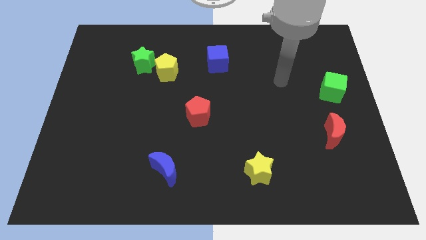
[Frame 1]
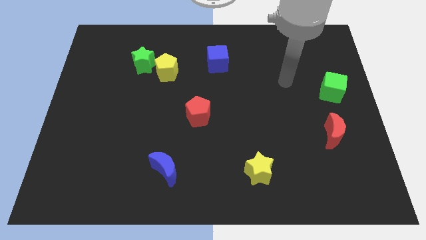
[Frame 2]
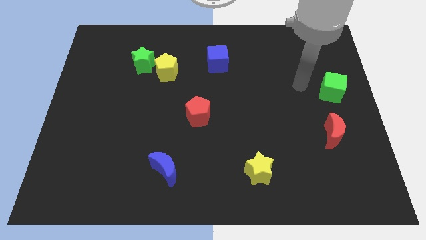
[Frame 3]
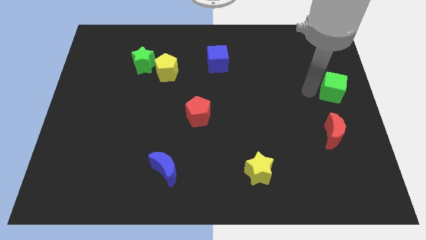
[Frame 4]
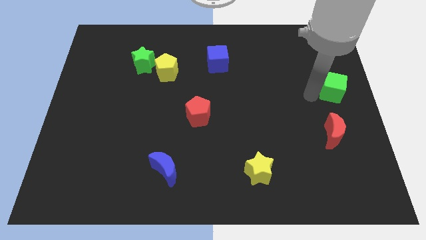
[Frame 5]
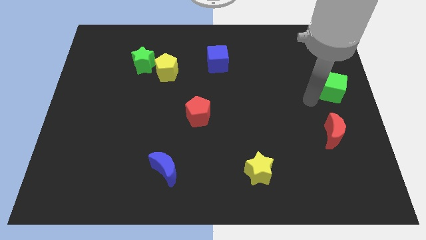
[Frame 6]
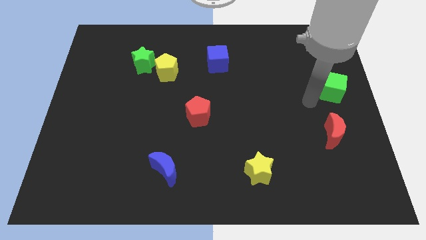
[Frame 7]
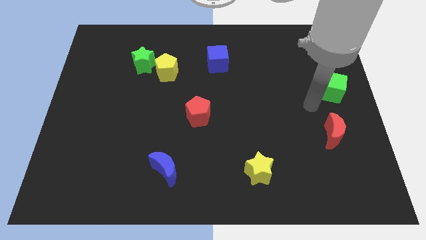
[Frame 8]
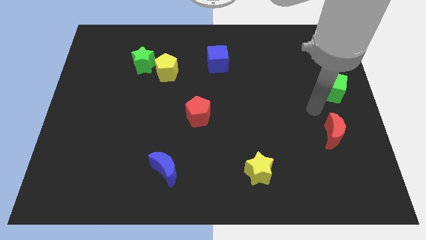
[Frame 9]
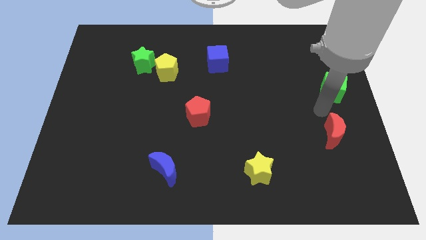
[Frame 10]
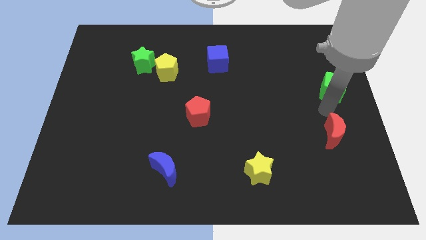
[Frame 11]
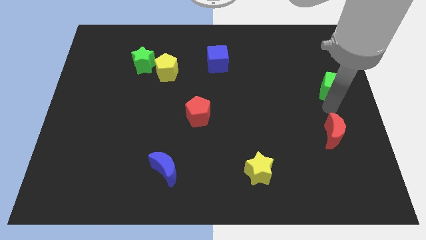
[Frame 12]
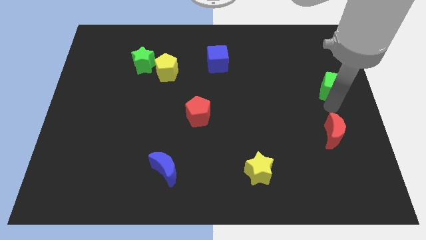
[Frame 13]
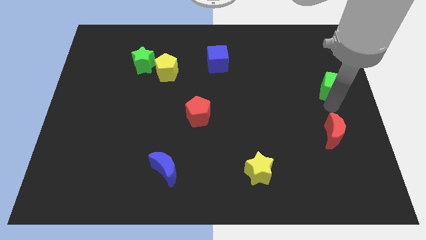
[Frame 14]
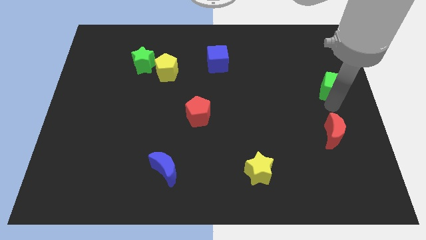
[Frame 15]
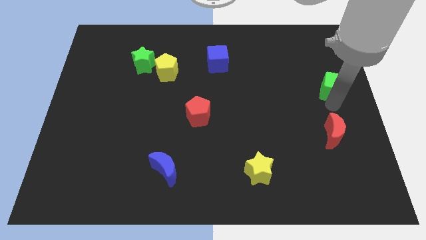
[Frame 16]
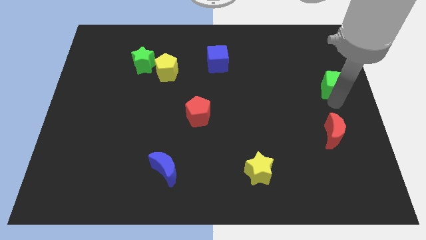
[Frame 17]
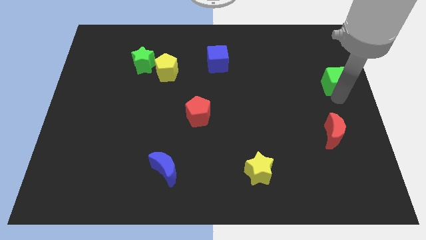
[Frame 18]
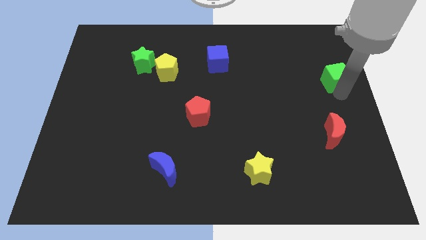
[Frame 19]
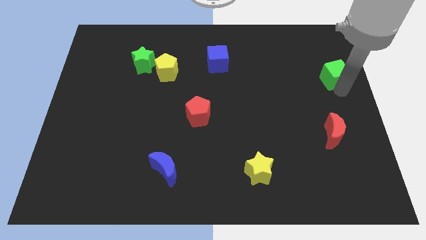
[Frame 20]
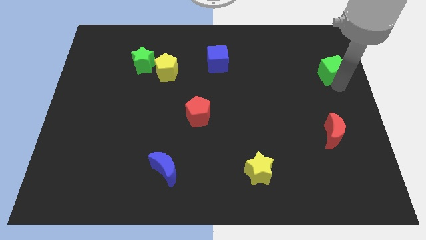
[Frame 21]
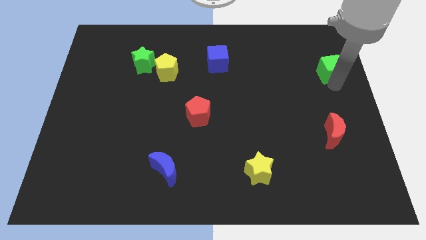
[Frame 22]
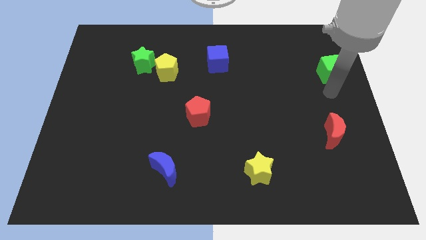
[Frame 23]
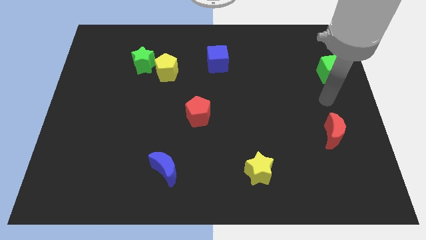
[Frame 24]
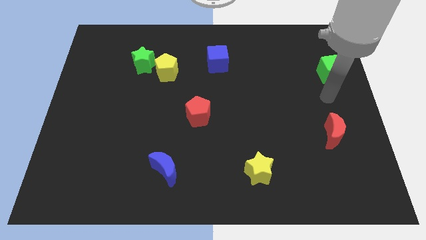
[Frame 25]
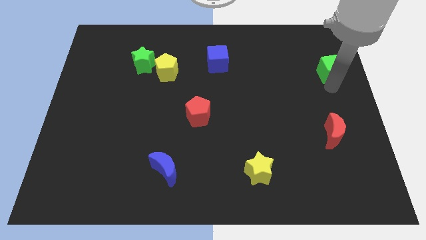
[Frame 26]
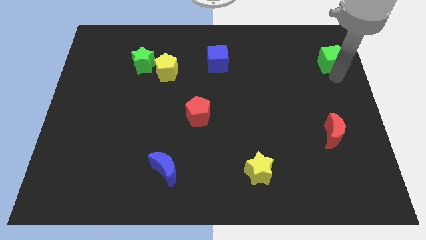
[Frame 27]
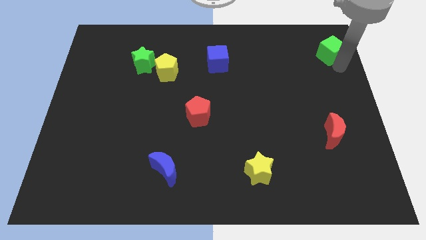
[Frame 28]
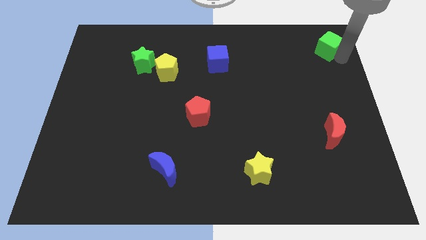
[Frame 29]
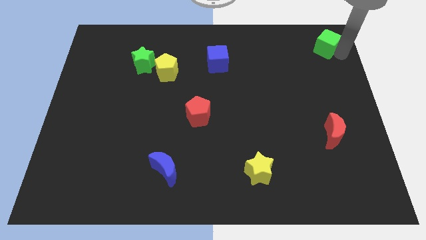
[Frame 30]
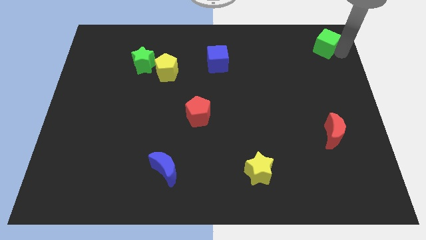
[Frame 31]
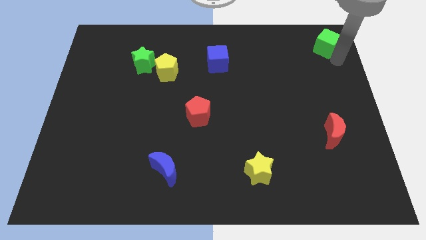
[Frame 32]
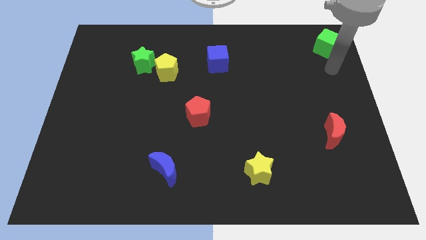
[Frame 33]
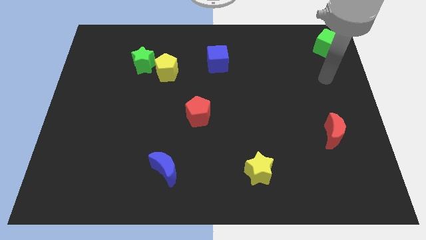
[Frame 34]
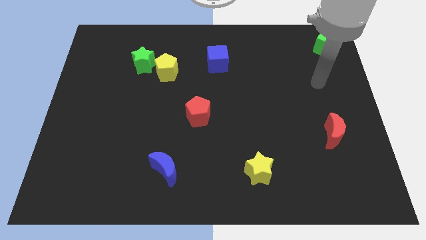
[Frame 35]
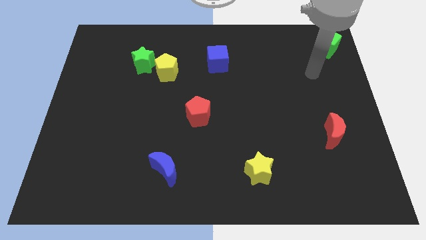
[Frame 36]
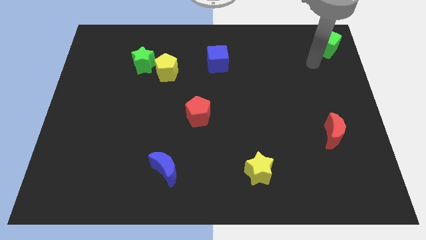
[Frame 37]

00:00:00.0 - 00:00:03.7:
push the green cube towards the top right corner

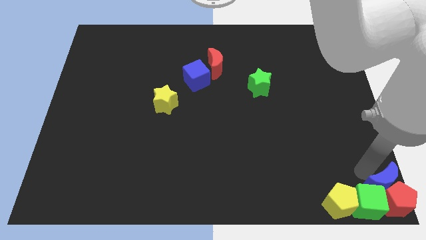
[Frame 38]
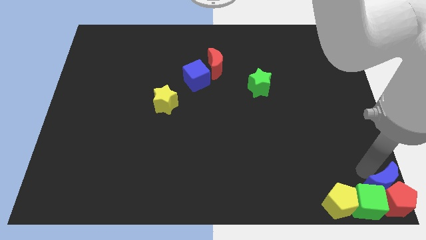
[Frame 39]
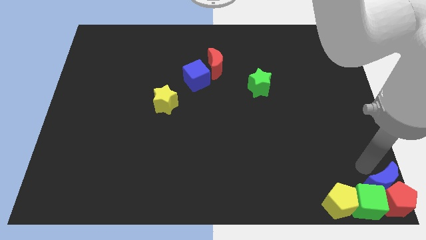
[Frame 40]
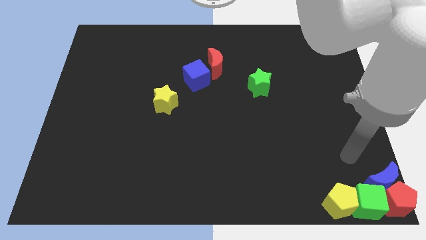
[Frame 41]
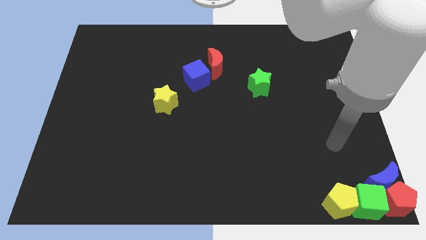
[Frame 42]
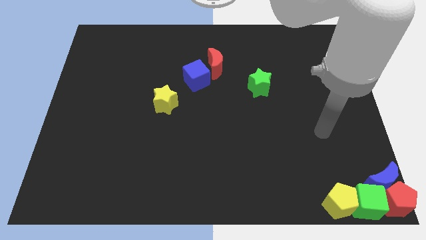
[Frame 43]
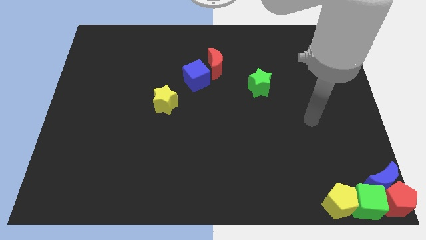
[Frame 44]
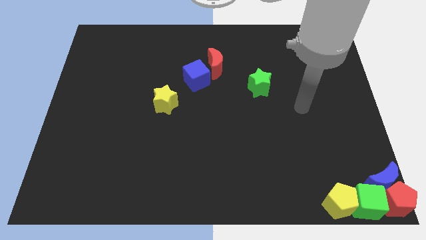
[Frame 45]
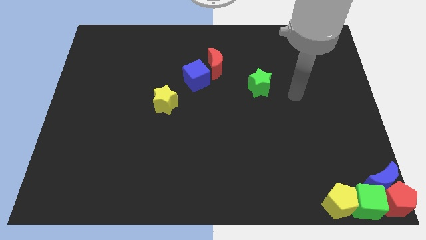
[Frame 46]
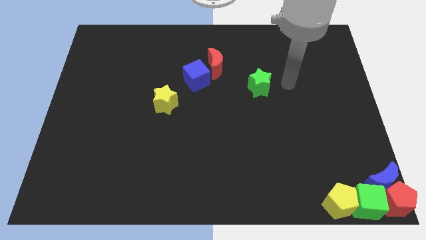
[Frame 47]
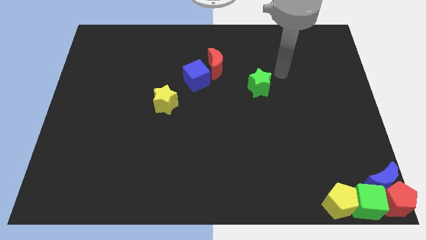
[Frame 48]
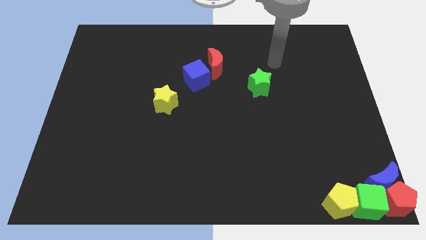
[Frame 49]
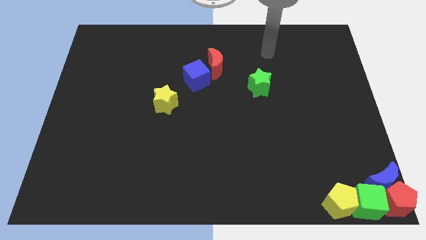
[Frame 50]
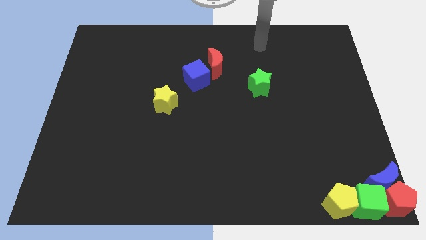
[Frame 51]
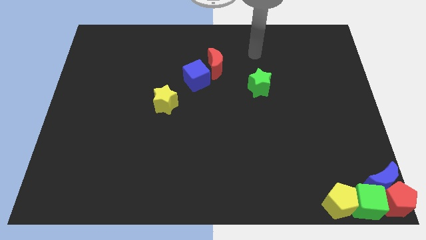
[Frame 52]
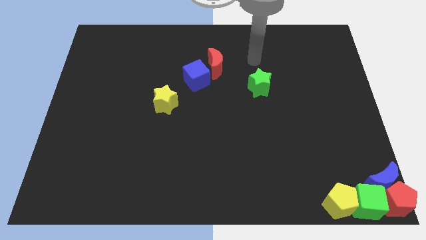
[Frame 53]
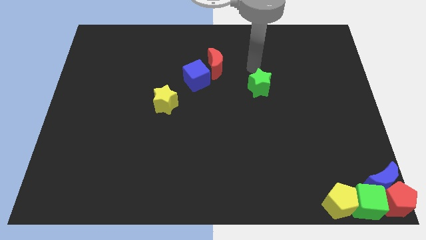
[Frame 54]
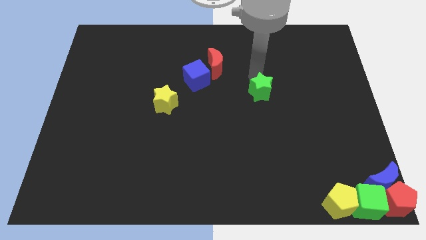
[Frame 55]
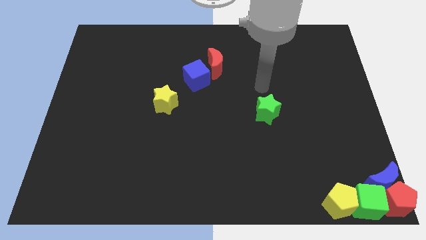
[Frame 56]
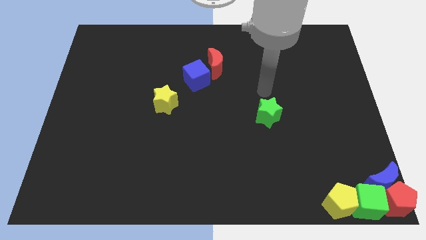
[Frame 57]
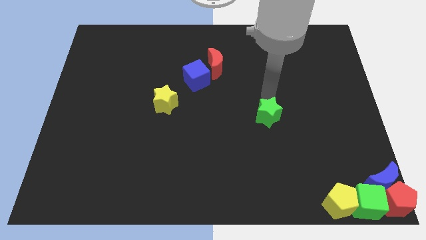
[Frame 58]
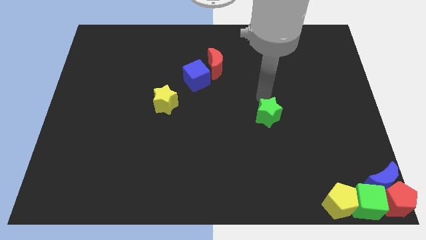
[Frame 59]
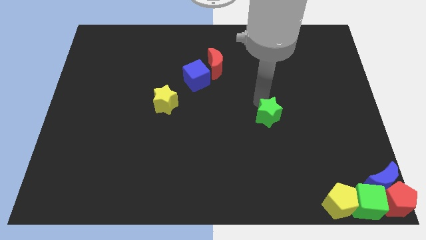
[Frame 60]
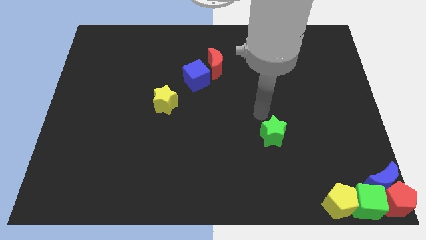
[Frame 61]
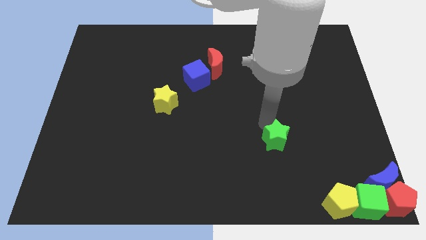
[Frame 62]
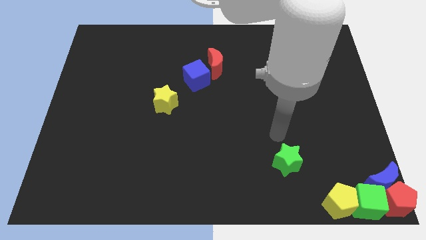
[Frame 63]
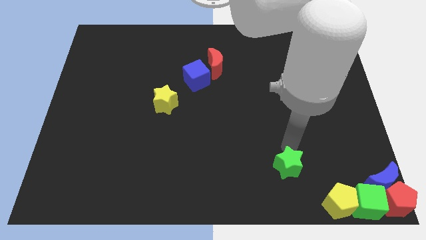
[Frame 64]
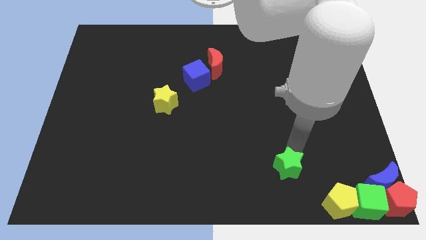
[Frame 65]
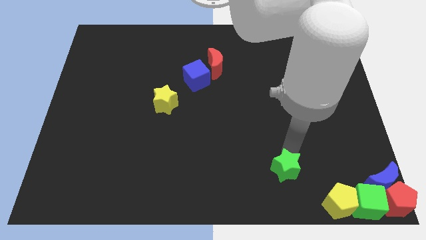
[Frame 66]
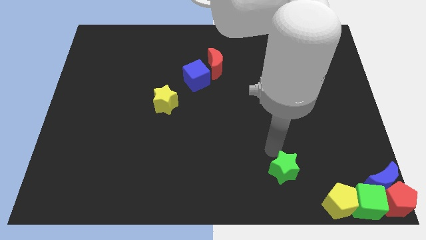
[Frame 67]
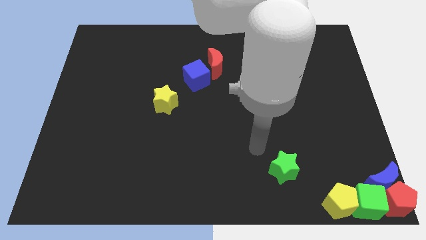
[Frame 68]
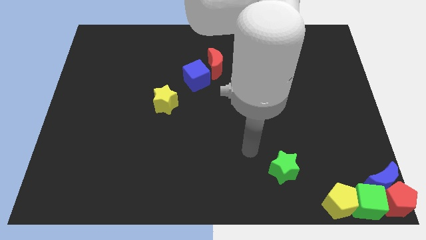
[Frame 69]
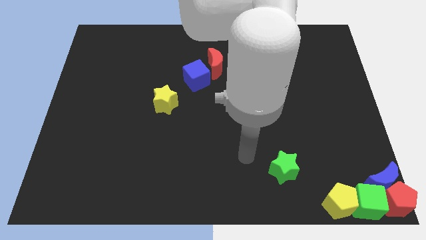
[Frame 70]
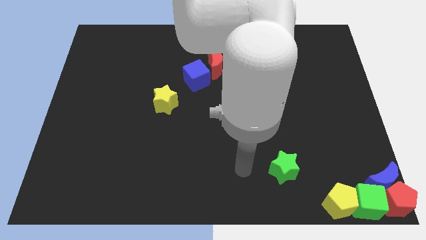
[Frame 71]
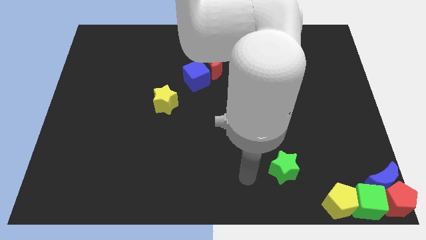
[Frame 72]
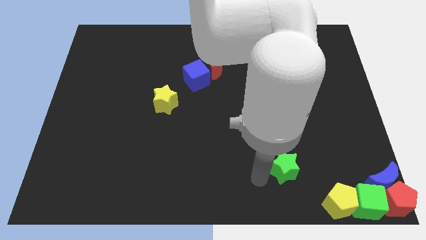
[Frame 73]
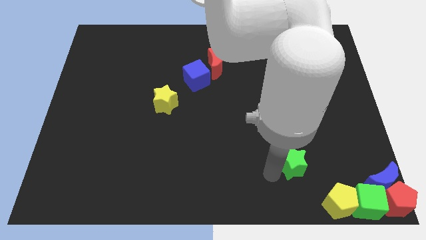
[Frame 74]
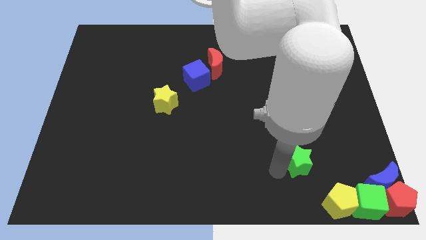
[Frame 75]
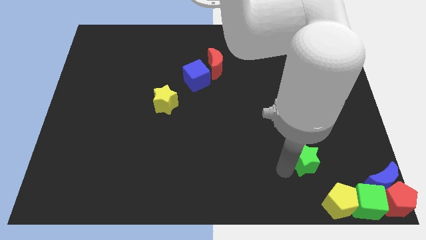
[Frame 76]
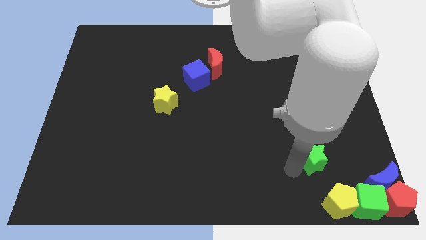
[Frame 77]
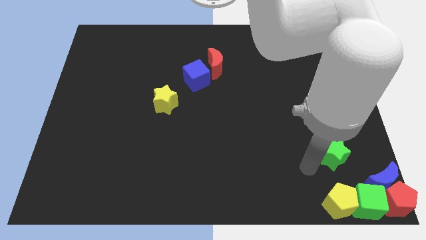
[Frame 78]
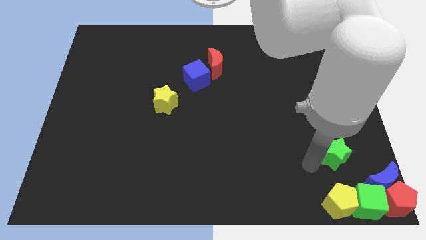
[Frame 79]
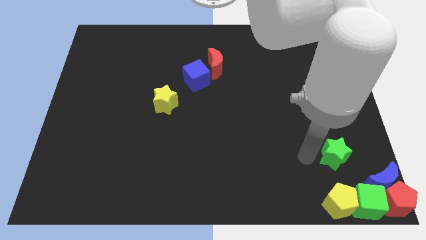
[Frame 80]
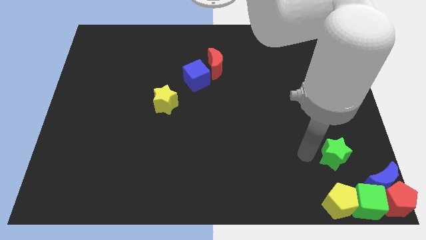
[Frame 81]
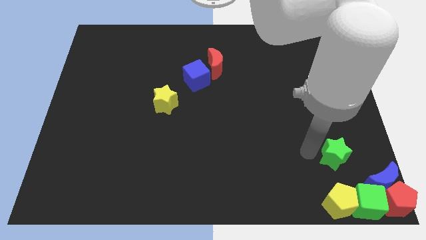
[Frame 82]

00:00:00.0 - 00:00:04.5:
place the green star at the top of the yellow pentagon

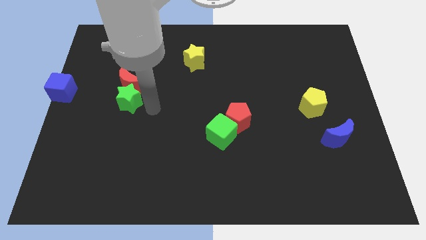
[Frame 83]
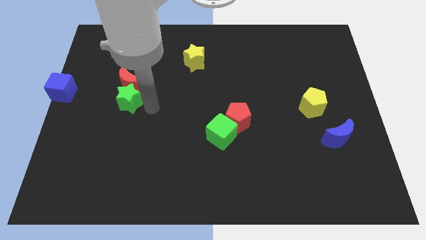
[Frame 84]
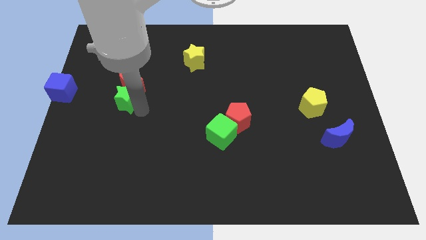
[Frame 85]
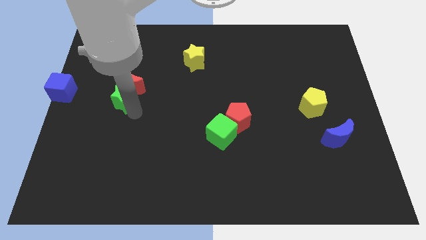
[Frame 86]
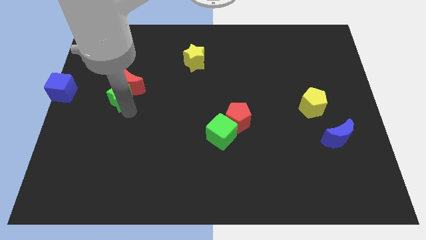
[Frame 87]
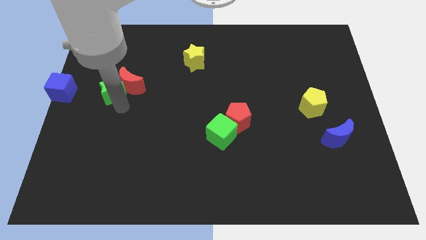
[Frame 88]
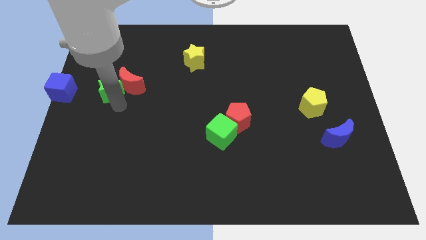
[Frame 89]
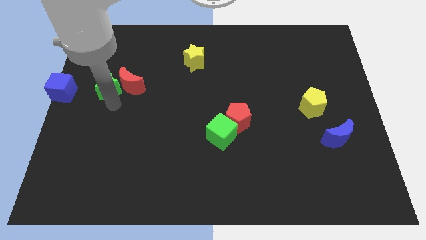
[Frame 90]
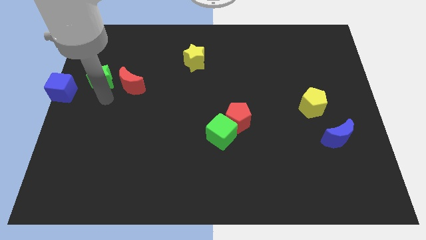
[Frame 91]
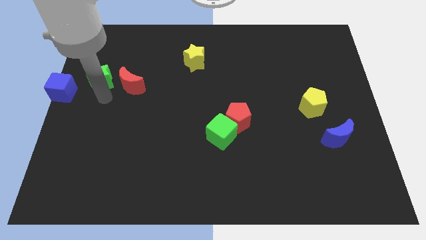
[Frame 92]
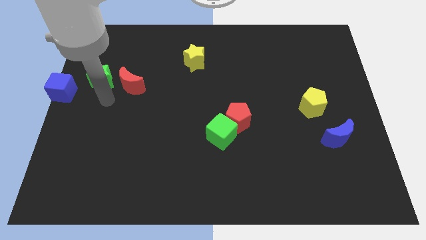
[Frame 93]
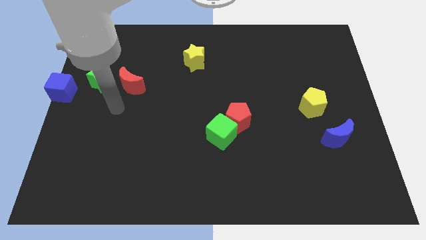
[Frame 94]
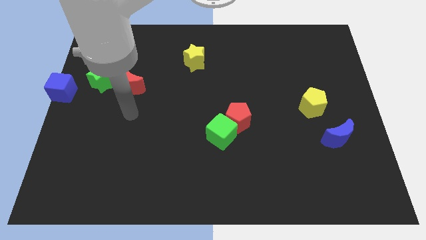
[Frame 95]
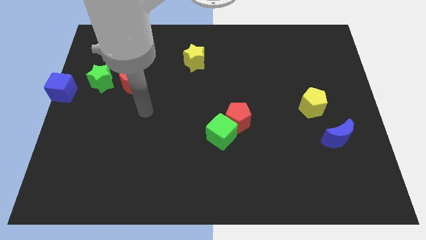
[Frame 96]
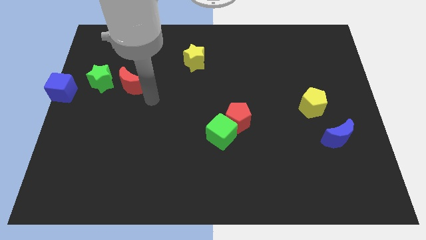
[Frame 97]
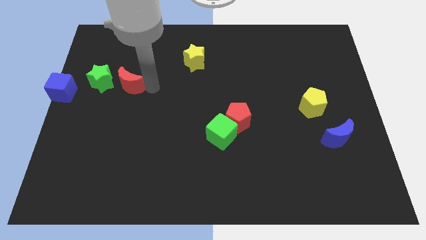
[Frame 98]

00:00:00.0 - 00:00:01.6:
separate green star from the red moon
